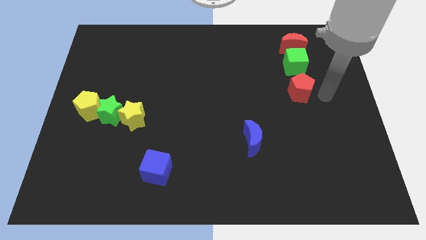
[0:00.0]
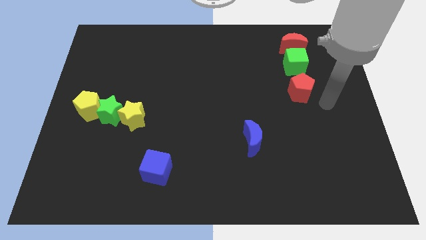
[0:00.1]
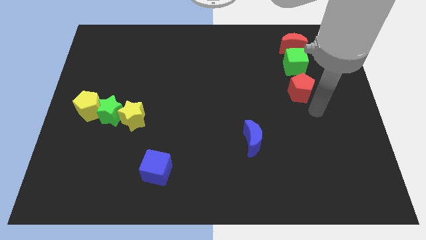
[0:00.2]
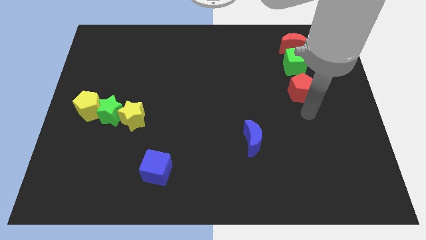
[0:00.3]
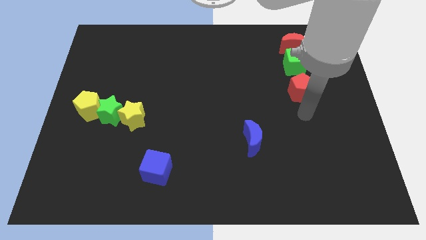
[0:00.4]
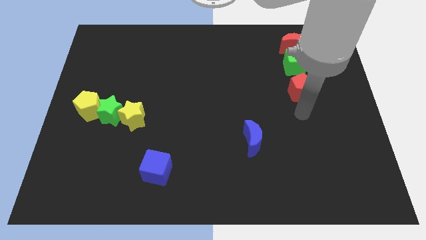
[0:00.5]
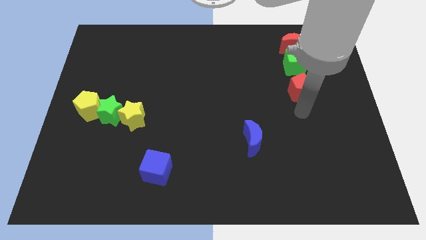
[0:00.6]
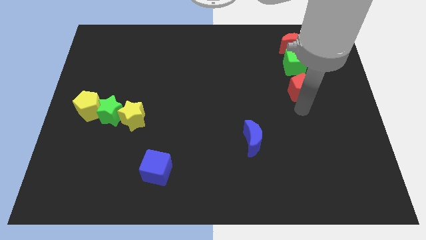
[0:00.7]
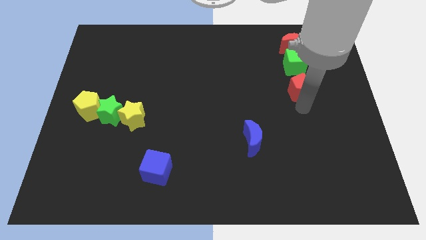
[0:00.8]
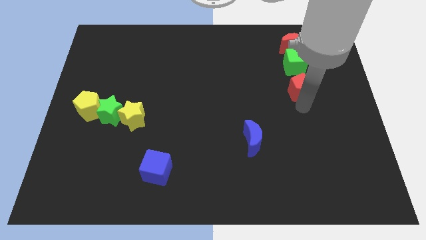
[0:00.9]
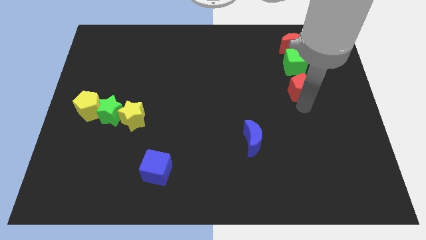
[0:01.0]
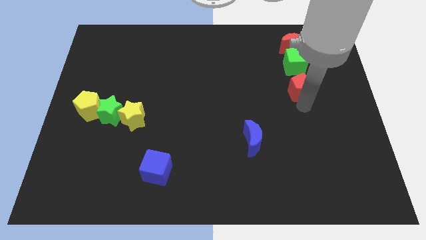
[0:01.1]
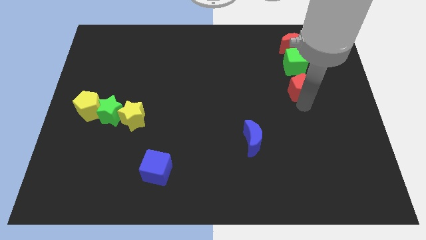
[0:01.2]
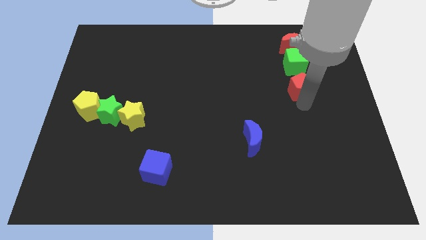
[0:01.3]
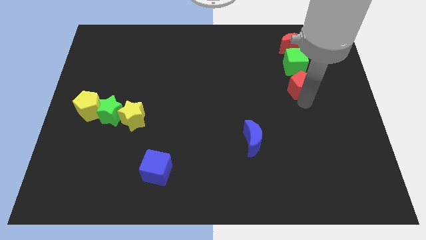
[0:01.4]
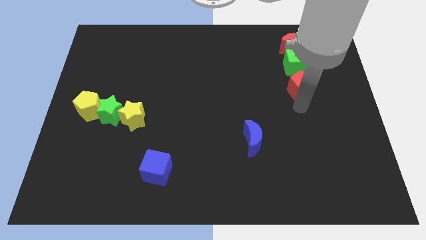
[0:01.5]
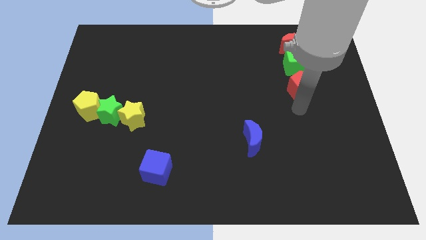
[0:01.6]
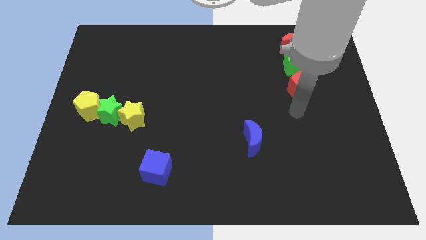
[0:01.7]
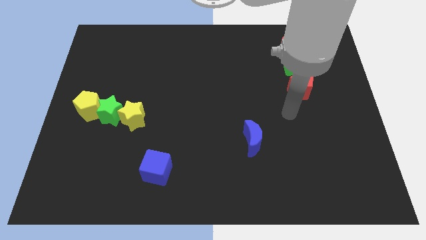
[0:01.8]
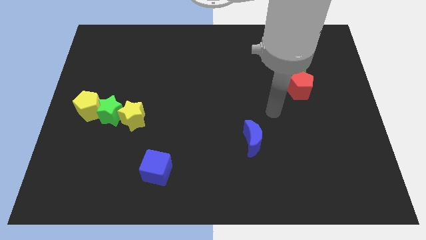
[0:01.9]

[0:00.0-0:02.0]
move the red pentagon to the bottom side of the green cube

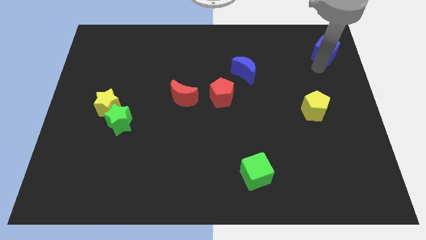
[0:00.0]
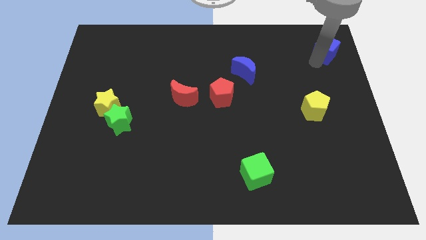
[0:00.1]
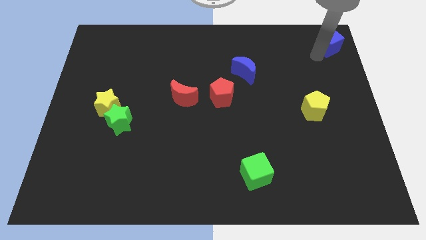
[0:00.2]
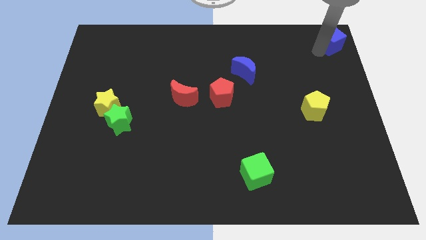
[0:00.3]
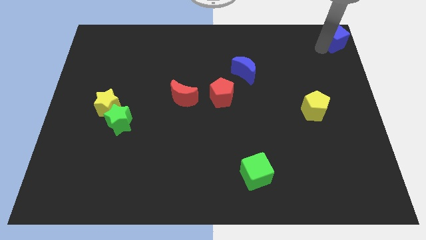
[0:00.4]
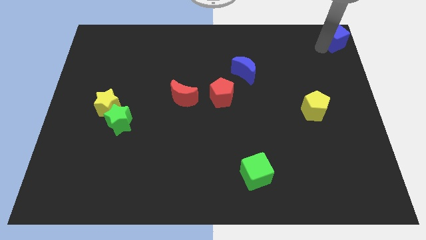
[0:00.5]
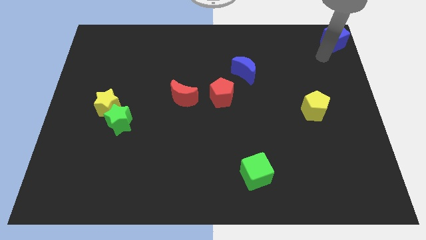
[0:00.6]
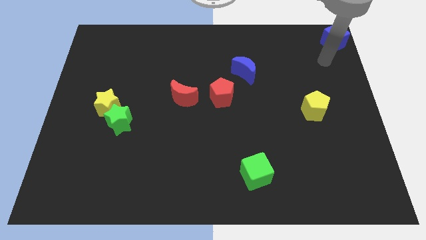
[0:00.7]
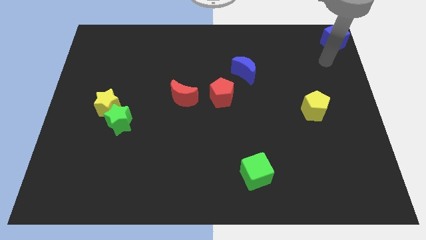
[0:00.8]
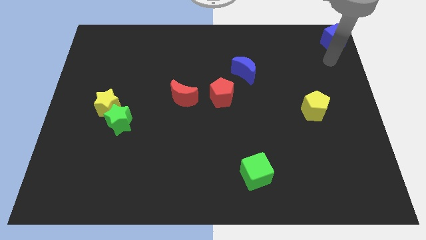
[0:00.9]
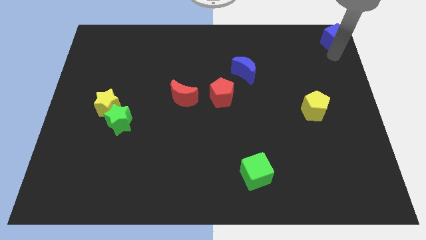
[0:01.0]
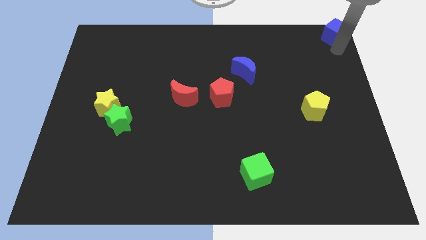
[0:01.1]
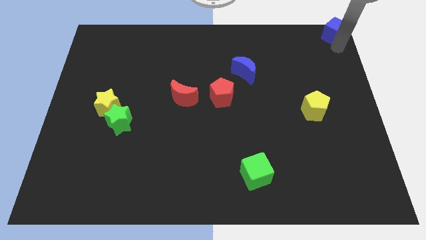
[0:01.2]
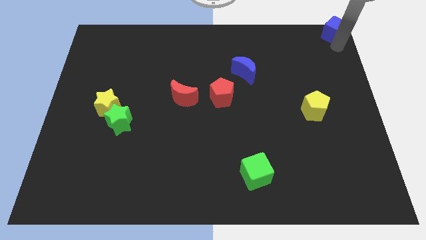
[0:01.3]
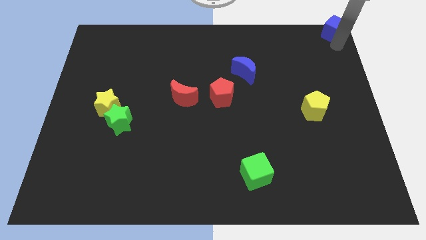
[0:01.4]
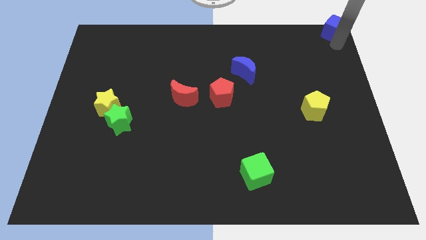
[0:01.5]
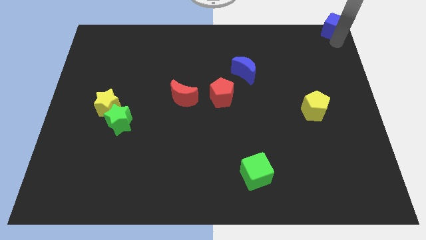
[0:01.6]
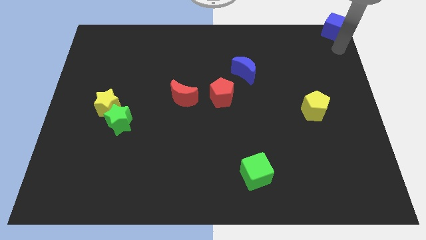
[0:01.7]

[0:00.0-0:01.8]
place the blue cube diagonally to blue moon

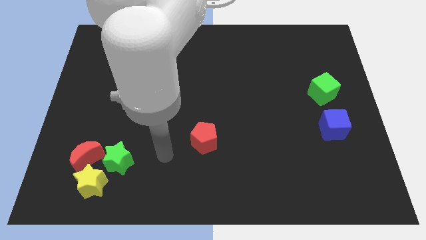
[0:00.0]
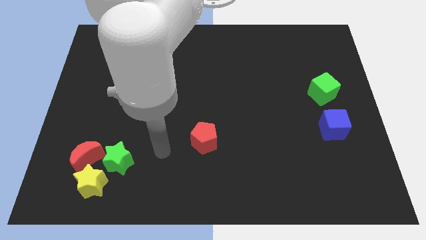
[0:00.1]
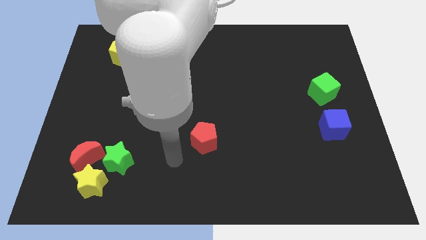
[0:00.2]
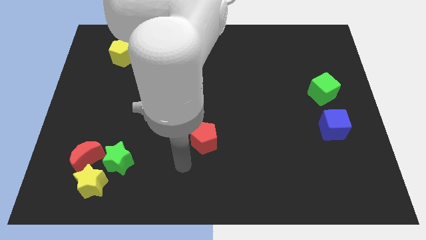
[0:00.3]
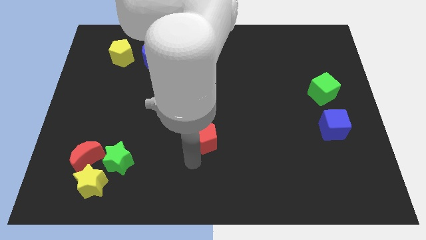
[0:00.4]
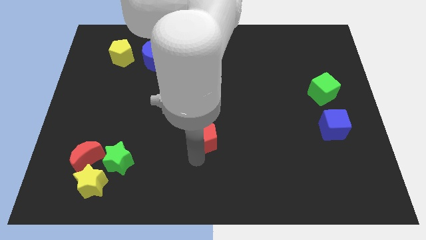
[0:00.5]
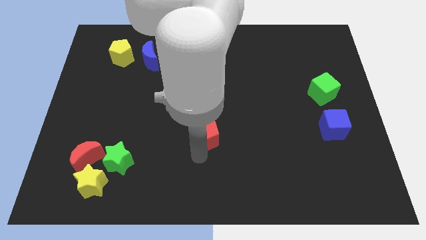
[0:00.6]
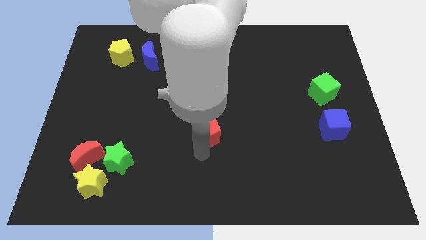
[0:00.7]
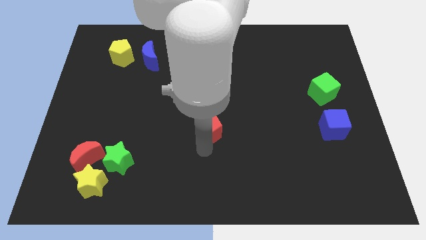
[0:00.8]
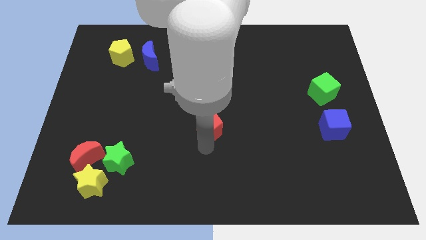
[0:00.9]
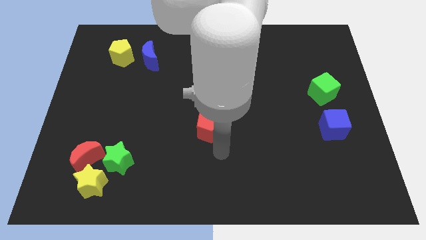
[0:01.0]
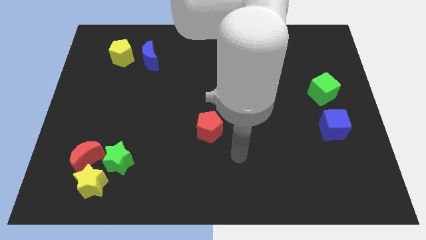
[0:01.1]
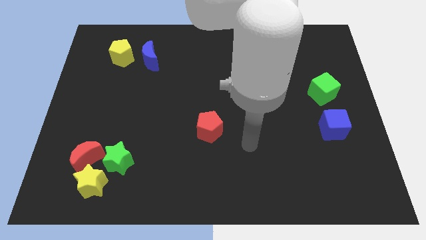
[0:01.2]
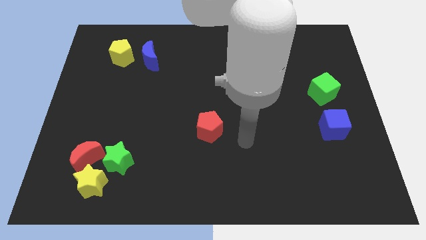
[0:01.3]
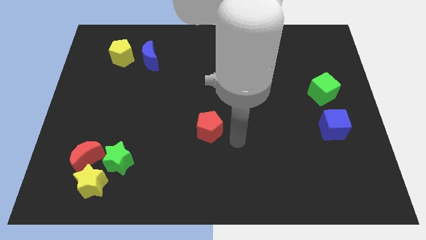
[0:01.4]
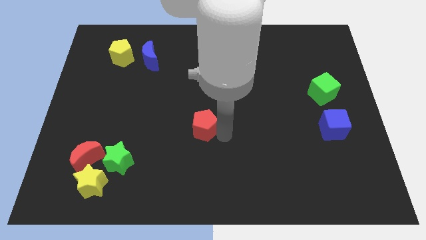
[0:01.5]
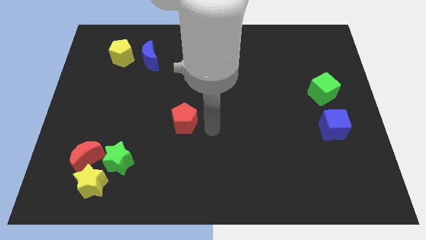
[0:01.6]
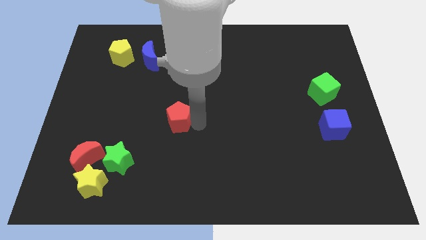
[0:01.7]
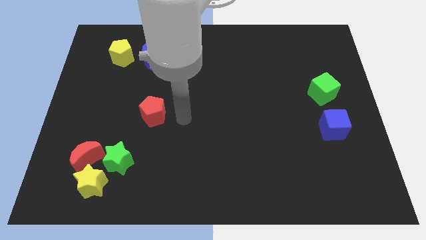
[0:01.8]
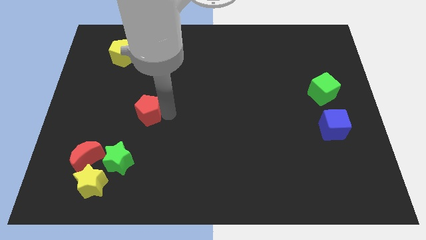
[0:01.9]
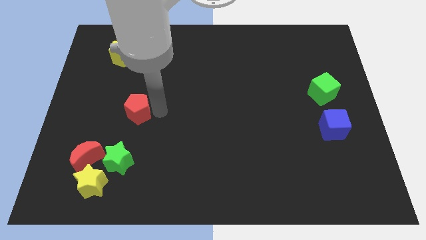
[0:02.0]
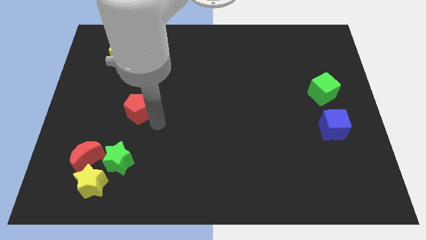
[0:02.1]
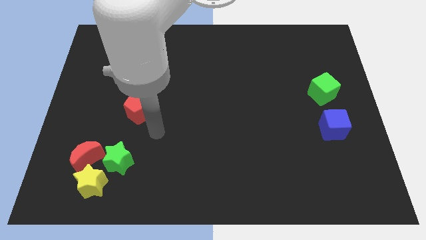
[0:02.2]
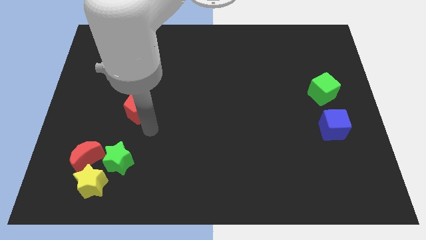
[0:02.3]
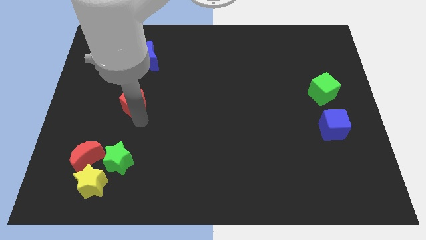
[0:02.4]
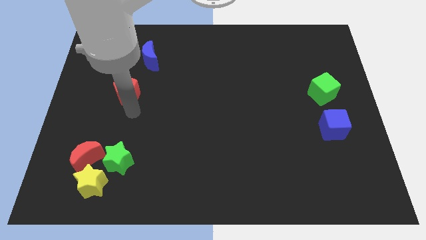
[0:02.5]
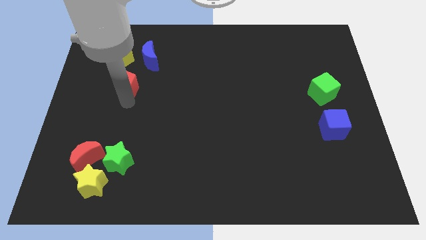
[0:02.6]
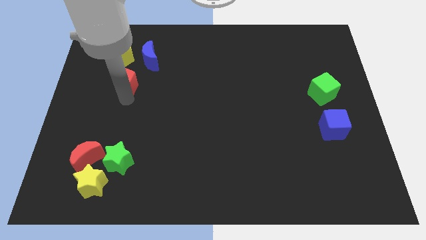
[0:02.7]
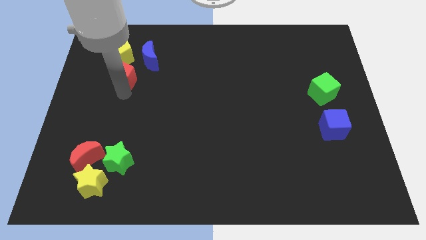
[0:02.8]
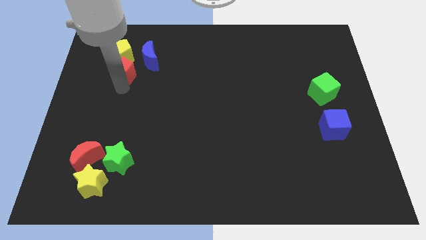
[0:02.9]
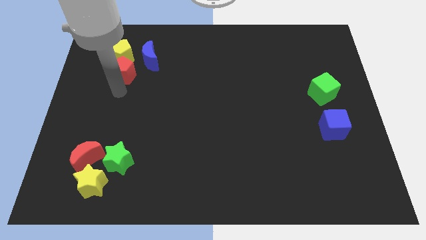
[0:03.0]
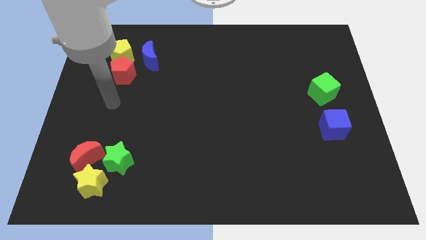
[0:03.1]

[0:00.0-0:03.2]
move red pentagon below yellow pentagon

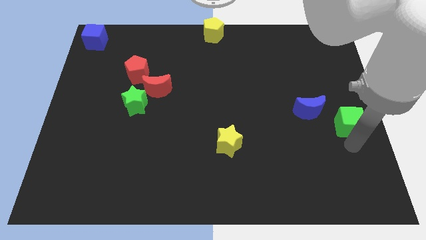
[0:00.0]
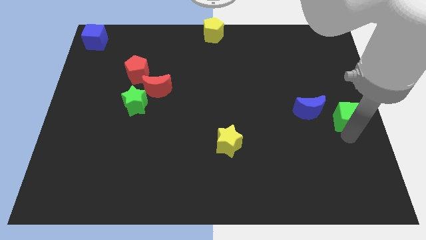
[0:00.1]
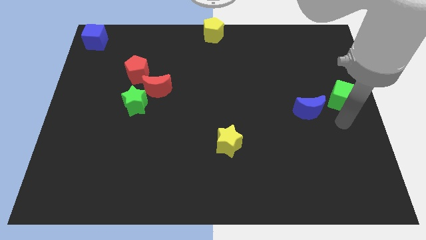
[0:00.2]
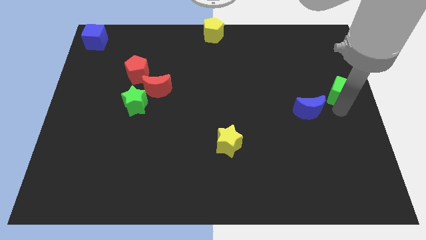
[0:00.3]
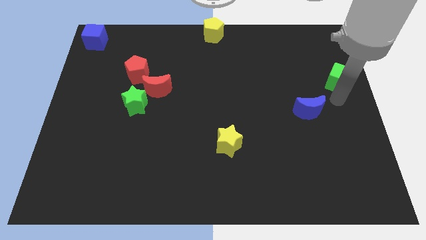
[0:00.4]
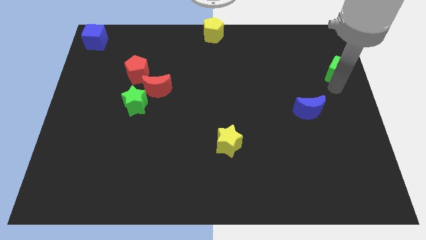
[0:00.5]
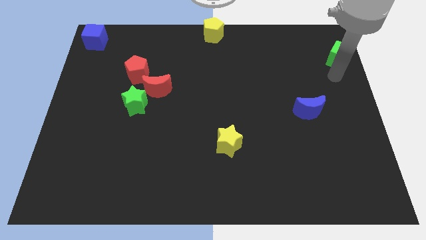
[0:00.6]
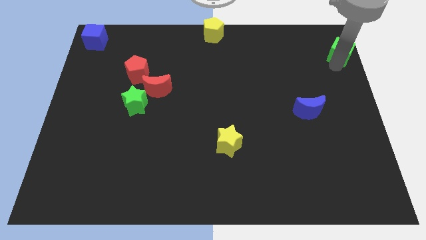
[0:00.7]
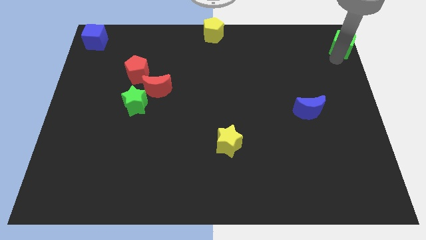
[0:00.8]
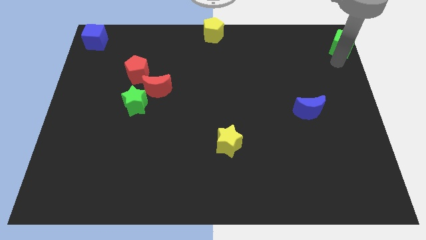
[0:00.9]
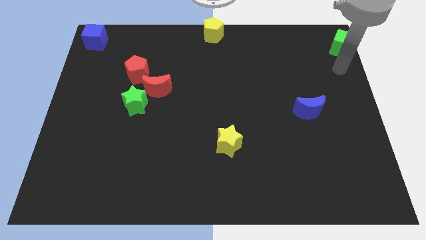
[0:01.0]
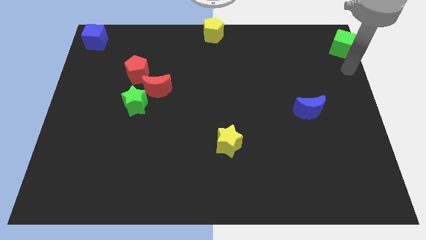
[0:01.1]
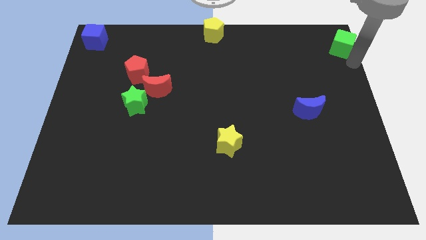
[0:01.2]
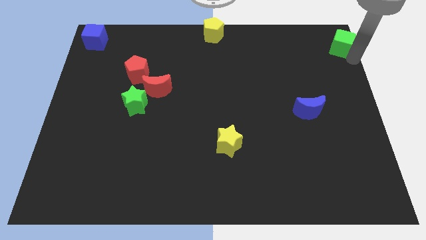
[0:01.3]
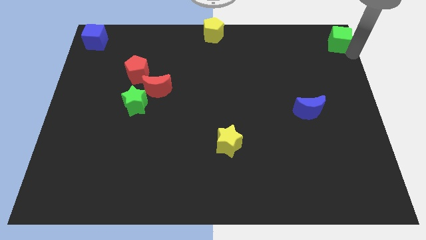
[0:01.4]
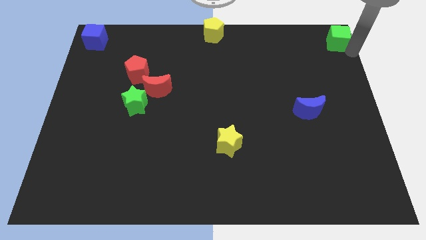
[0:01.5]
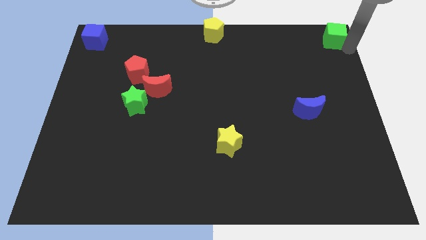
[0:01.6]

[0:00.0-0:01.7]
push the green cube towards the top right of the board

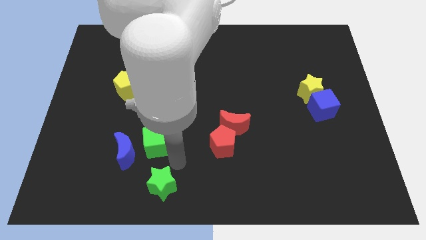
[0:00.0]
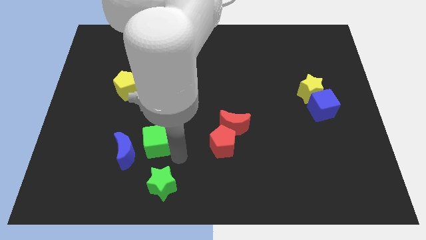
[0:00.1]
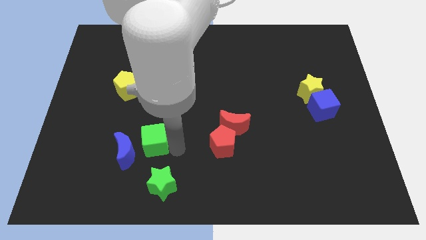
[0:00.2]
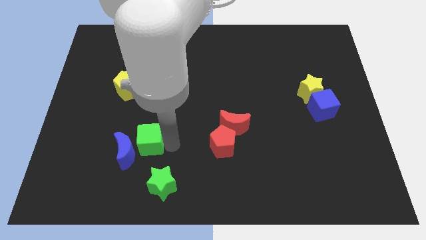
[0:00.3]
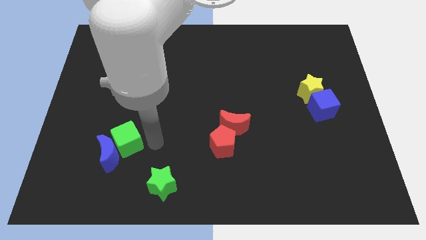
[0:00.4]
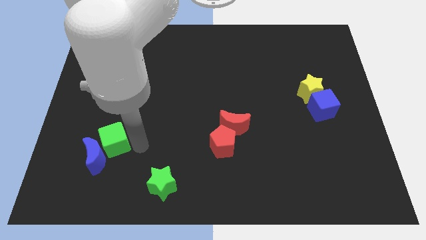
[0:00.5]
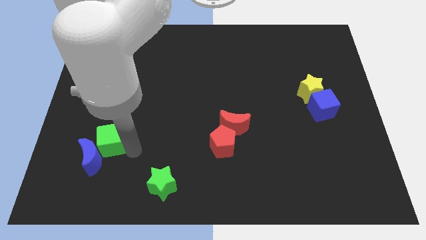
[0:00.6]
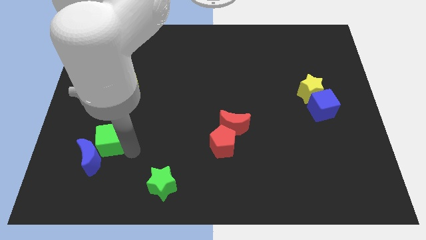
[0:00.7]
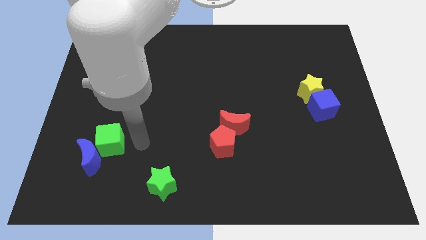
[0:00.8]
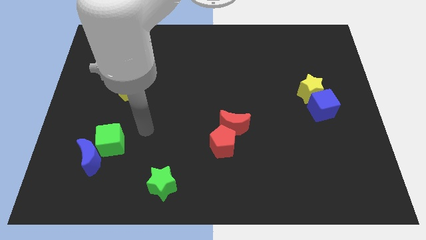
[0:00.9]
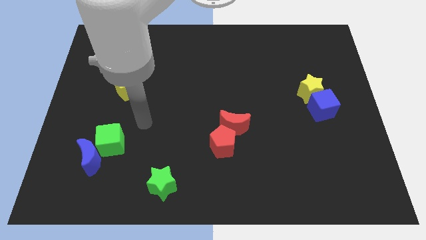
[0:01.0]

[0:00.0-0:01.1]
push the green cube and blue crescent towards the left side of the board
